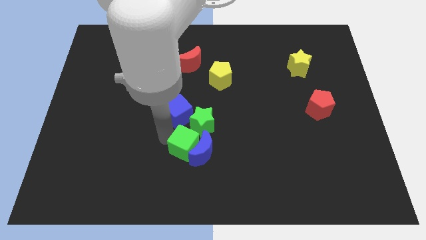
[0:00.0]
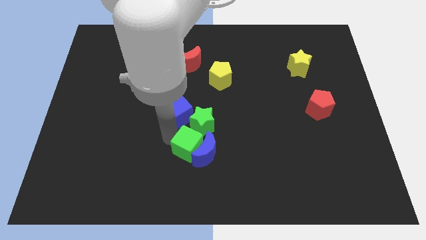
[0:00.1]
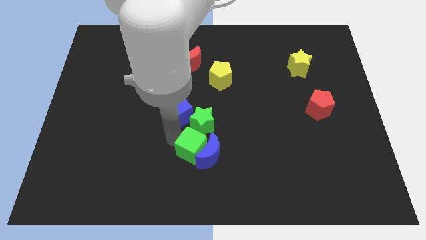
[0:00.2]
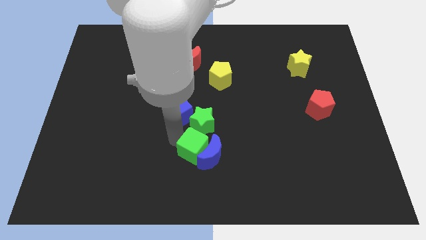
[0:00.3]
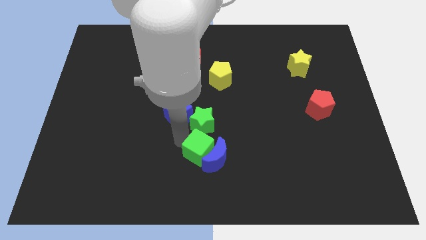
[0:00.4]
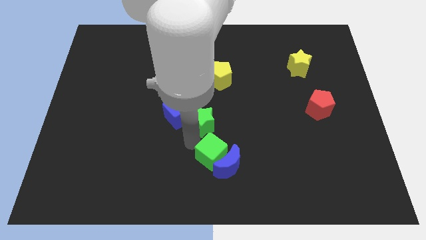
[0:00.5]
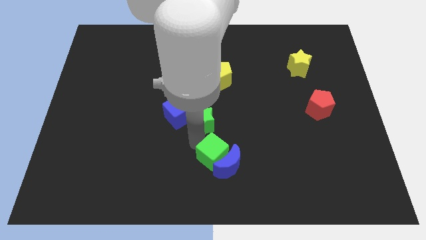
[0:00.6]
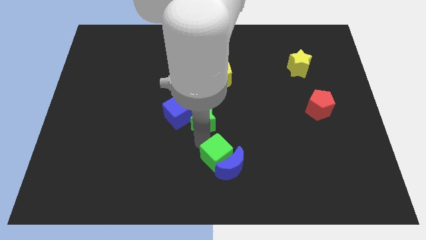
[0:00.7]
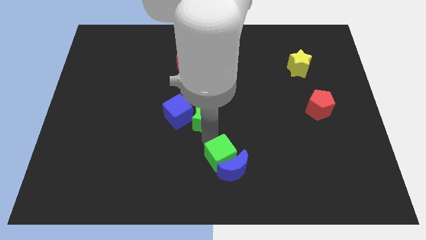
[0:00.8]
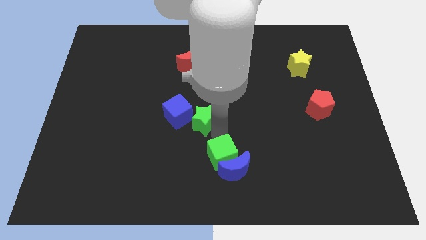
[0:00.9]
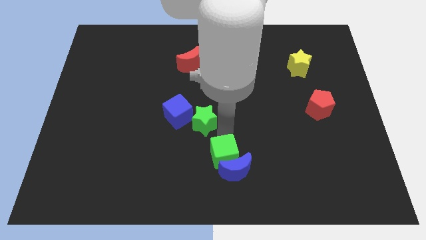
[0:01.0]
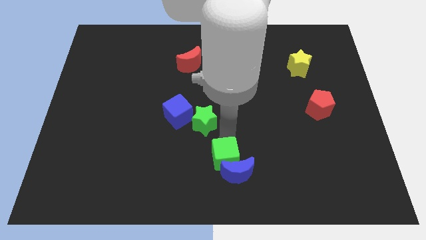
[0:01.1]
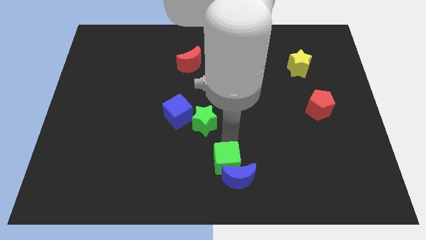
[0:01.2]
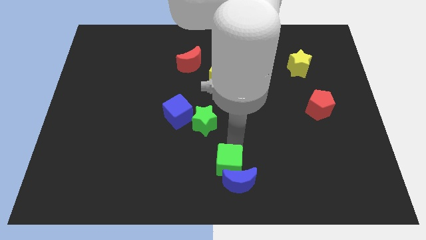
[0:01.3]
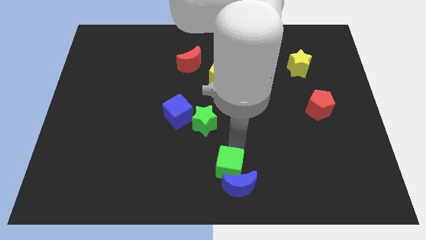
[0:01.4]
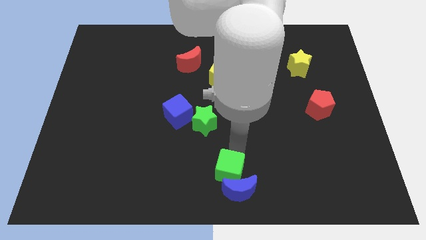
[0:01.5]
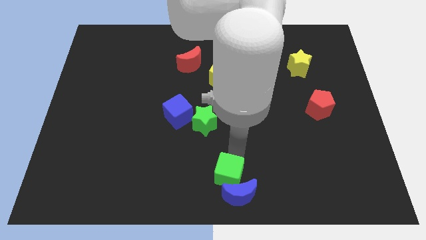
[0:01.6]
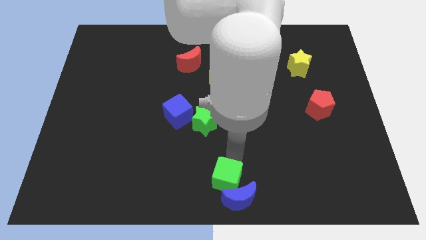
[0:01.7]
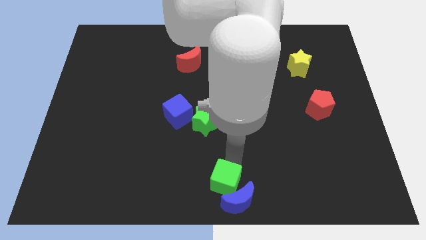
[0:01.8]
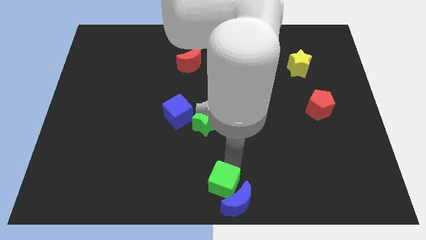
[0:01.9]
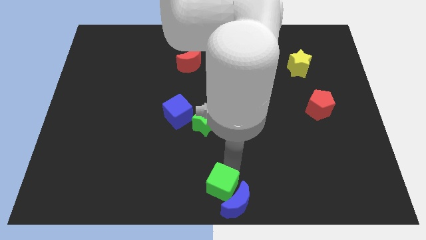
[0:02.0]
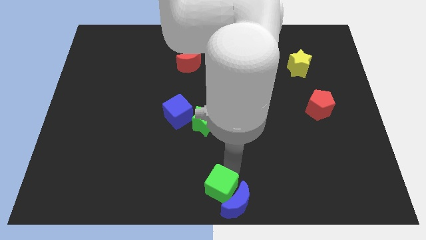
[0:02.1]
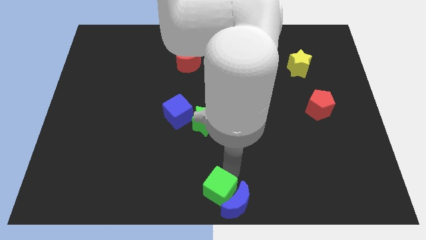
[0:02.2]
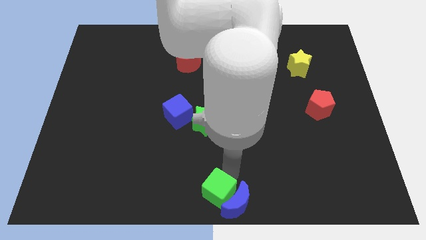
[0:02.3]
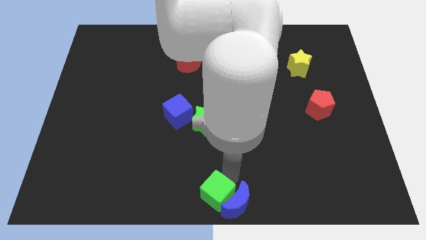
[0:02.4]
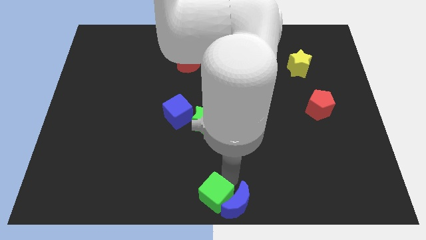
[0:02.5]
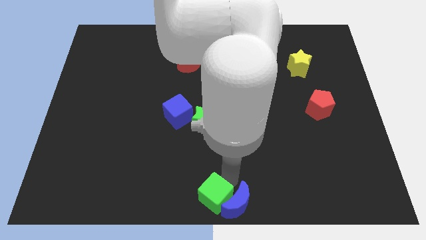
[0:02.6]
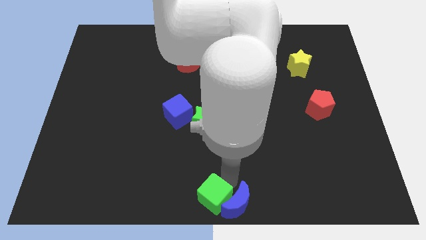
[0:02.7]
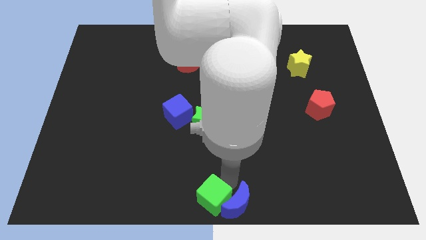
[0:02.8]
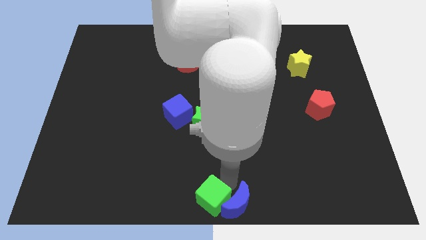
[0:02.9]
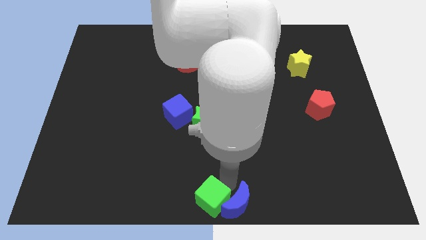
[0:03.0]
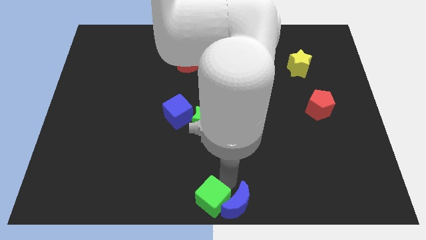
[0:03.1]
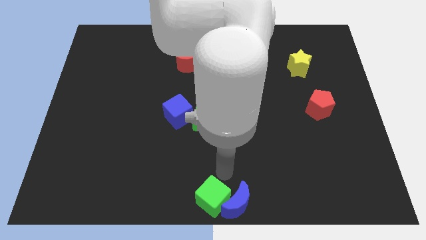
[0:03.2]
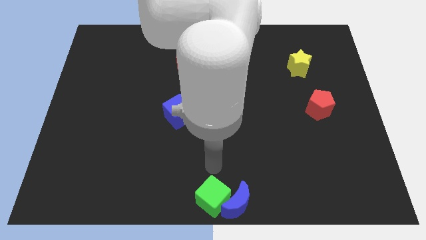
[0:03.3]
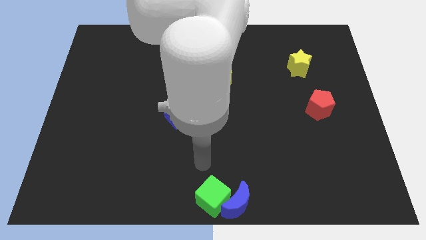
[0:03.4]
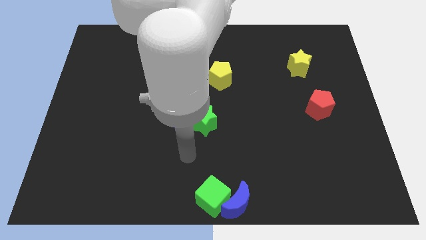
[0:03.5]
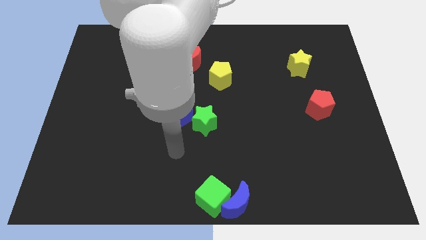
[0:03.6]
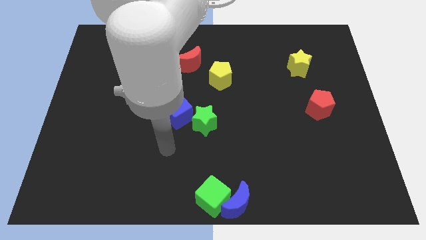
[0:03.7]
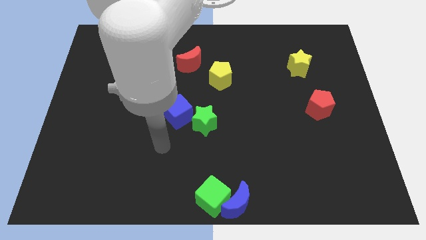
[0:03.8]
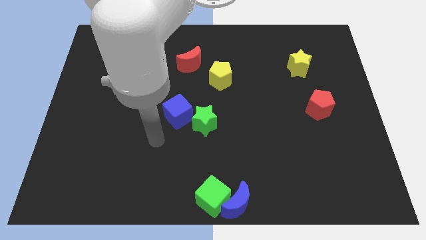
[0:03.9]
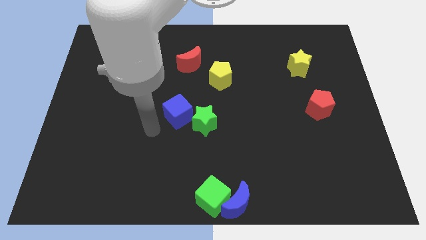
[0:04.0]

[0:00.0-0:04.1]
push green cube along with blue moon to the bottom center

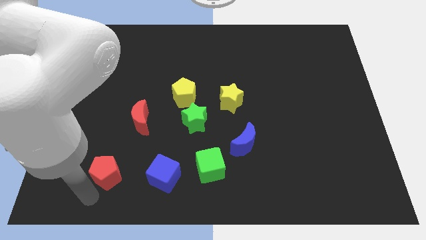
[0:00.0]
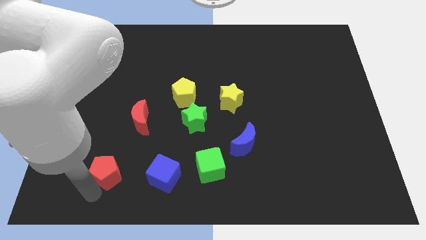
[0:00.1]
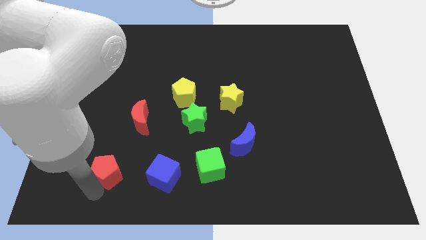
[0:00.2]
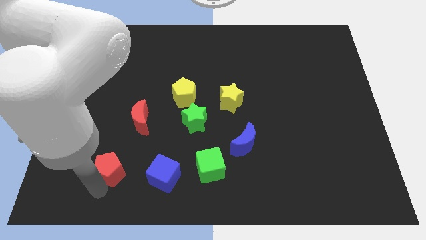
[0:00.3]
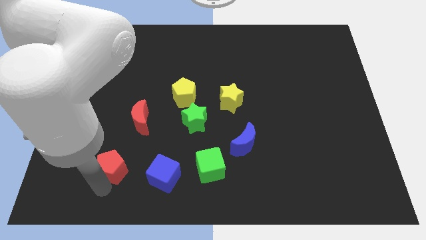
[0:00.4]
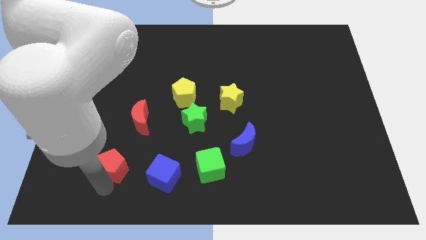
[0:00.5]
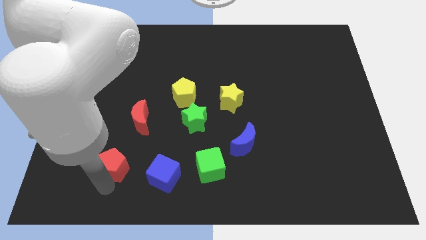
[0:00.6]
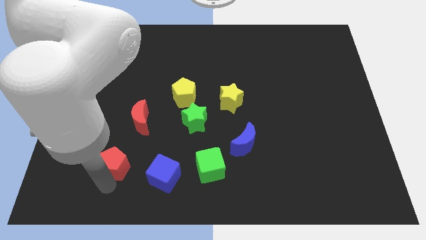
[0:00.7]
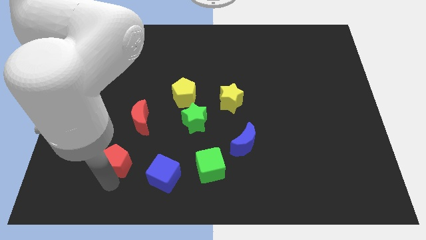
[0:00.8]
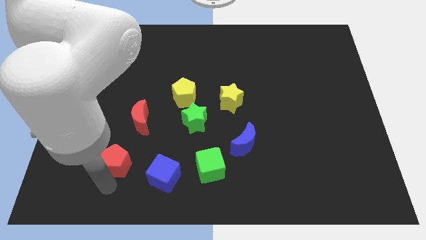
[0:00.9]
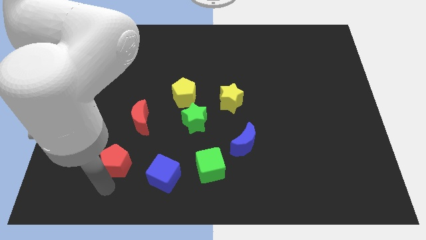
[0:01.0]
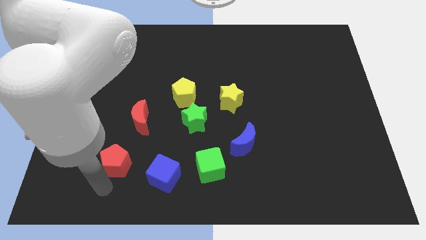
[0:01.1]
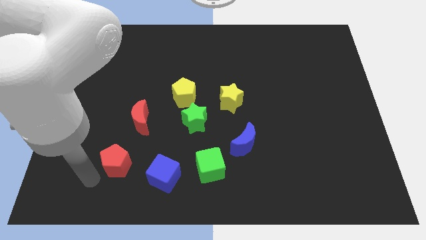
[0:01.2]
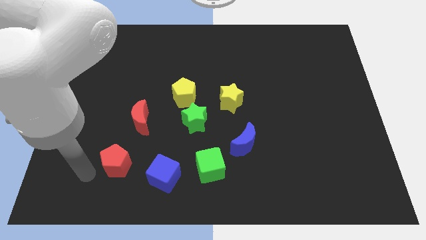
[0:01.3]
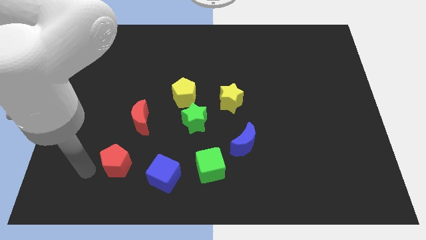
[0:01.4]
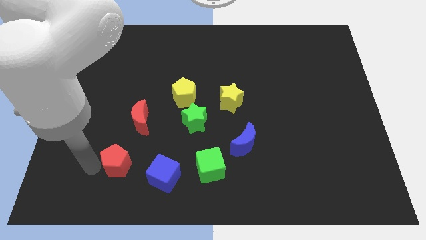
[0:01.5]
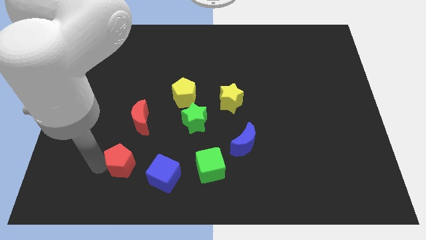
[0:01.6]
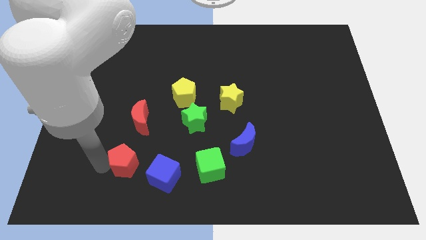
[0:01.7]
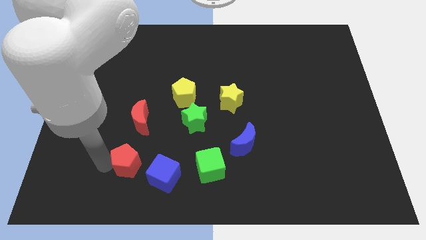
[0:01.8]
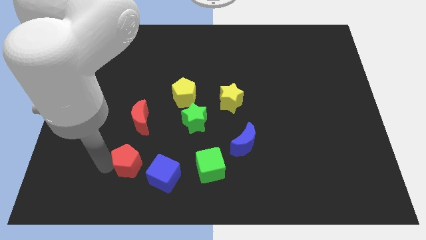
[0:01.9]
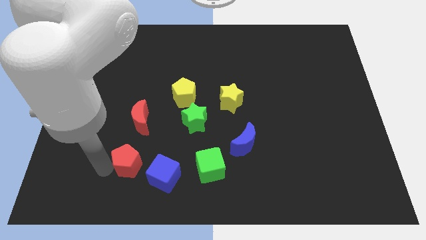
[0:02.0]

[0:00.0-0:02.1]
push red pentagon towards blue cube

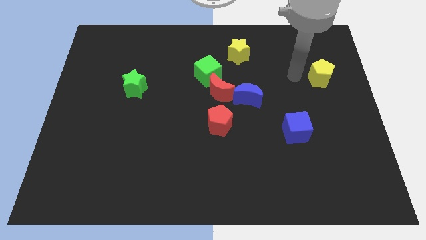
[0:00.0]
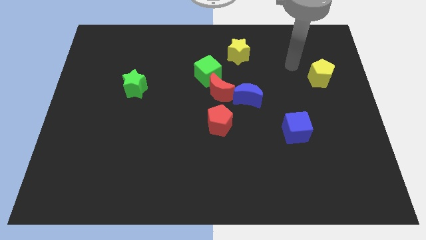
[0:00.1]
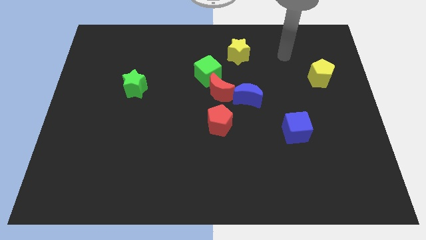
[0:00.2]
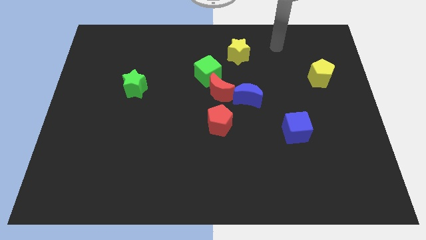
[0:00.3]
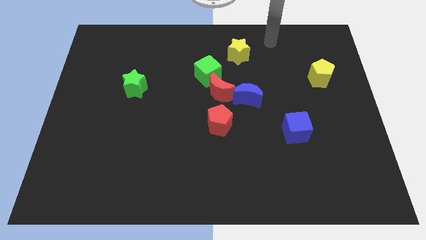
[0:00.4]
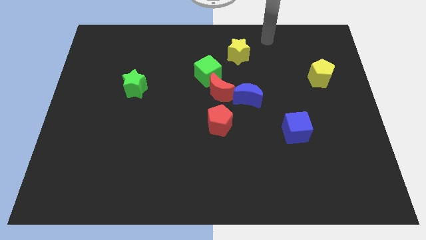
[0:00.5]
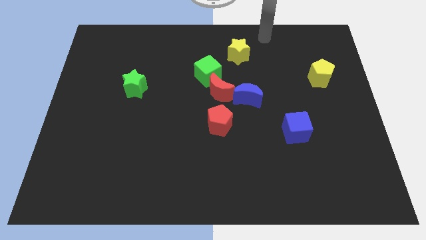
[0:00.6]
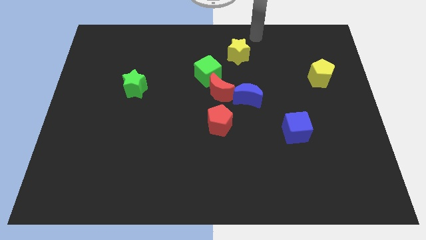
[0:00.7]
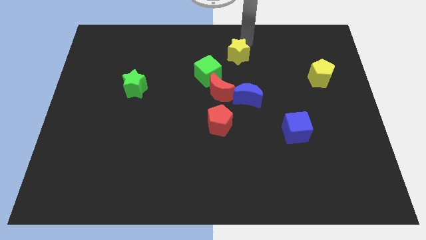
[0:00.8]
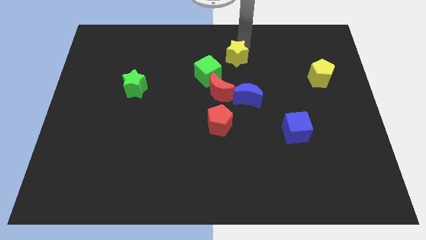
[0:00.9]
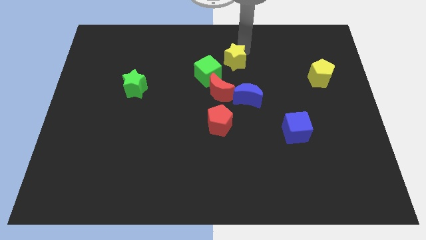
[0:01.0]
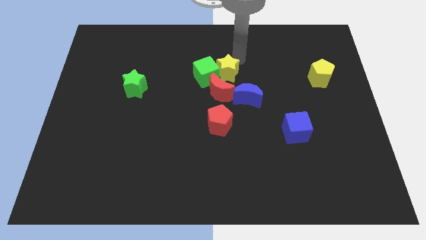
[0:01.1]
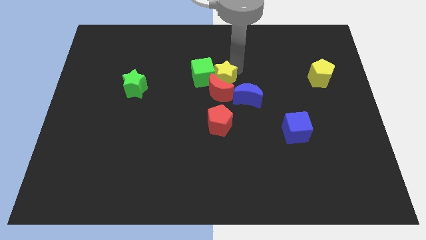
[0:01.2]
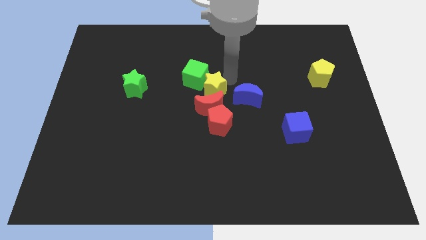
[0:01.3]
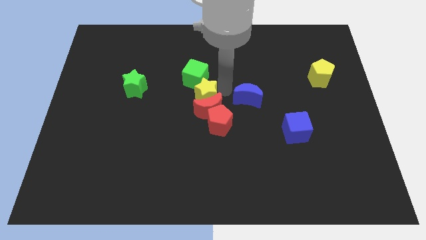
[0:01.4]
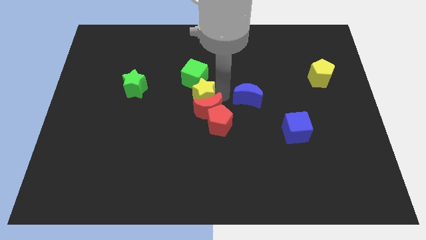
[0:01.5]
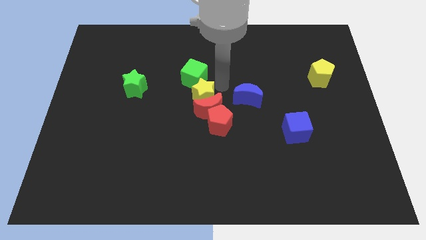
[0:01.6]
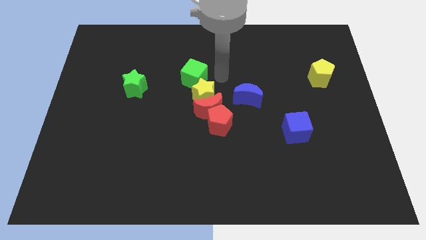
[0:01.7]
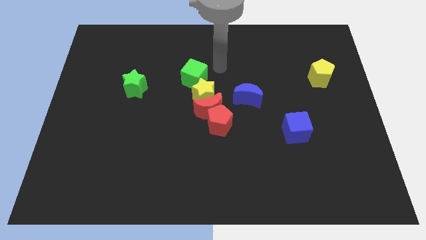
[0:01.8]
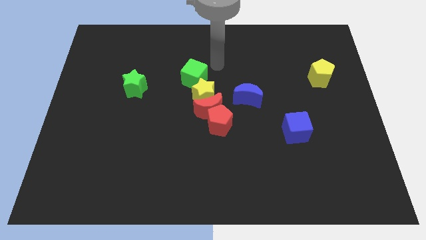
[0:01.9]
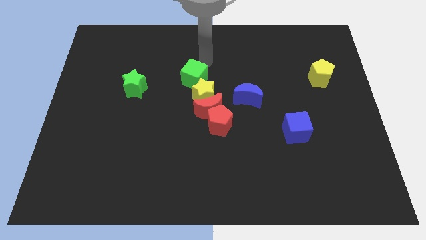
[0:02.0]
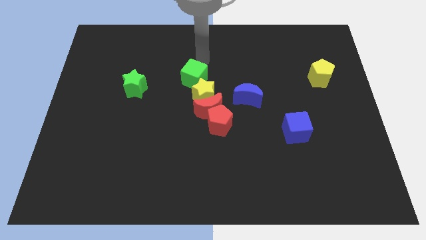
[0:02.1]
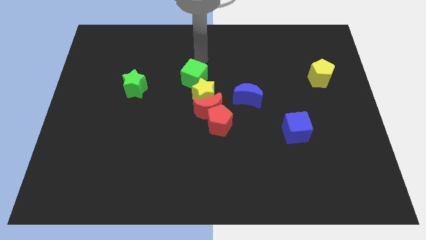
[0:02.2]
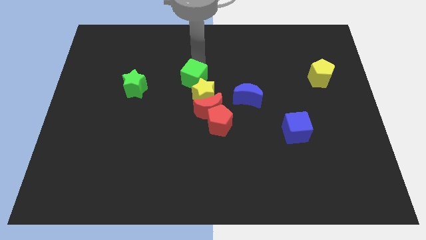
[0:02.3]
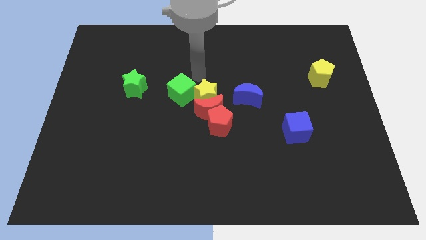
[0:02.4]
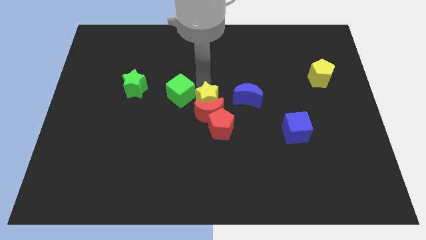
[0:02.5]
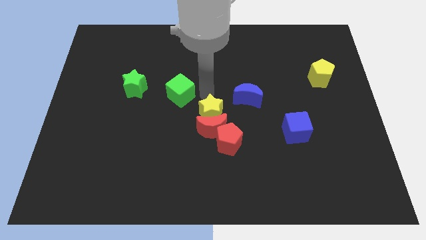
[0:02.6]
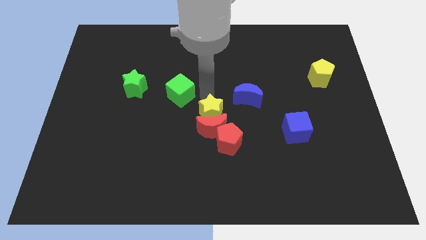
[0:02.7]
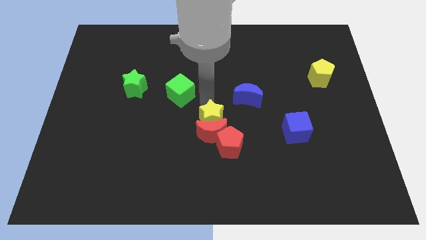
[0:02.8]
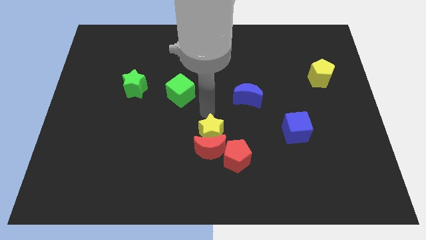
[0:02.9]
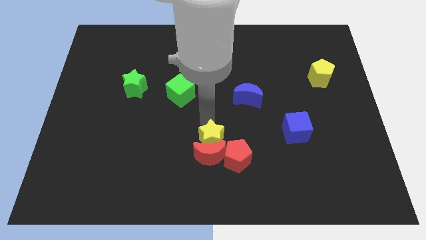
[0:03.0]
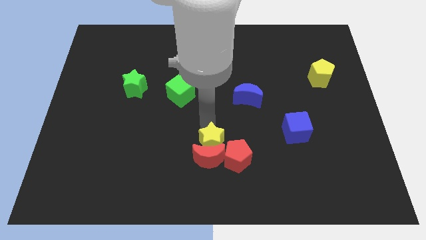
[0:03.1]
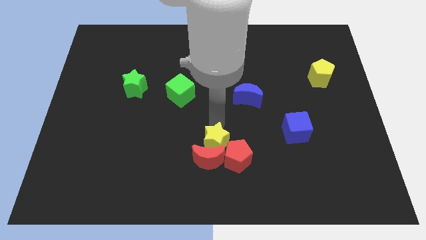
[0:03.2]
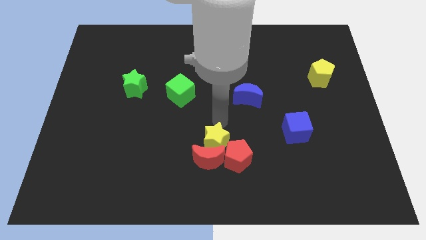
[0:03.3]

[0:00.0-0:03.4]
push the group of blocks to the center of the board
